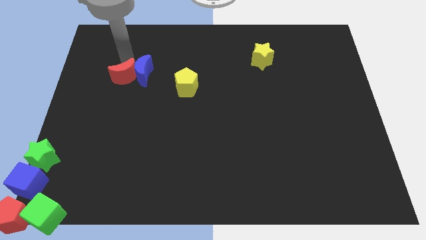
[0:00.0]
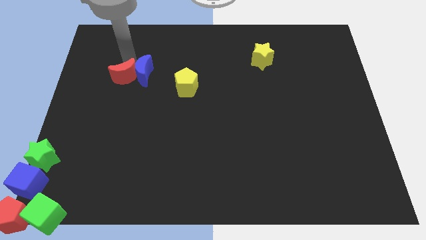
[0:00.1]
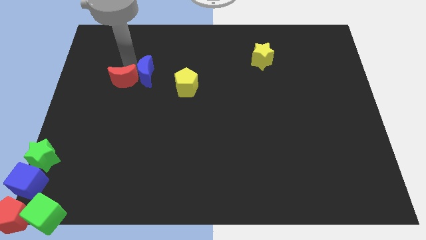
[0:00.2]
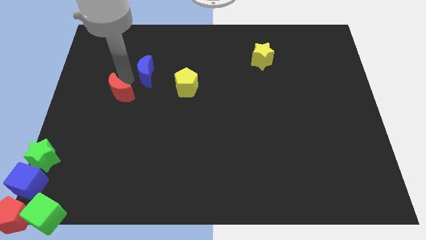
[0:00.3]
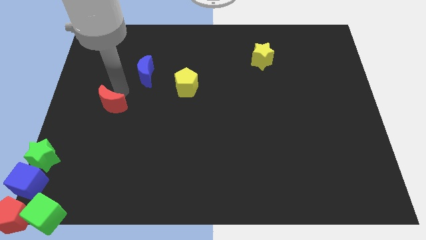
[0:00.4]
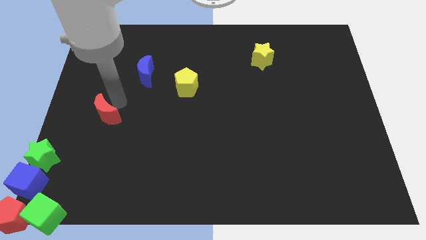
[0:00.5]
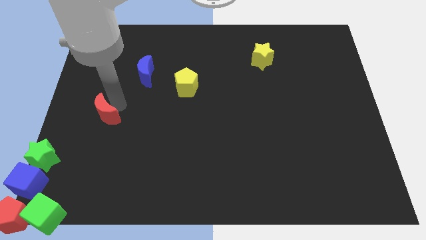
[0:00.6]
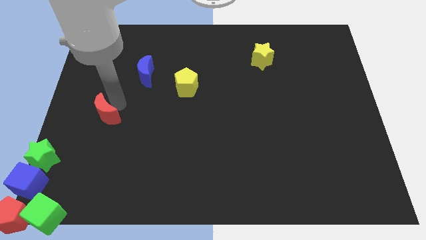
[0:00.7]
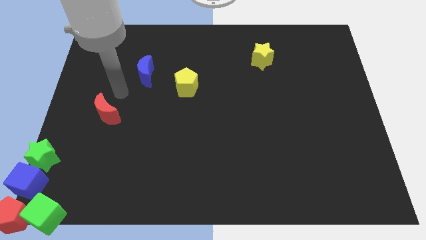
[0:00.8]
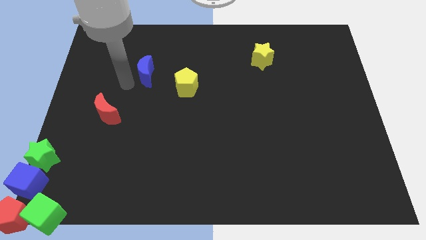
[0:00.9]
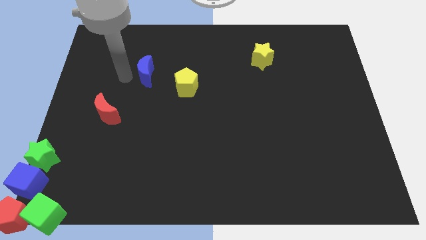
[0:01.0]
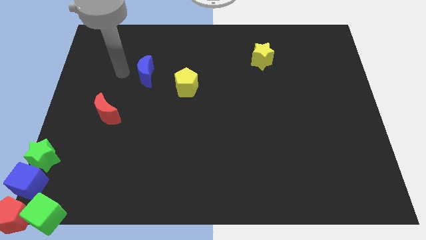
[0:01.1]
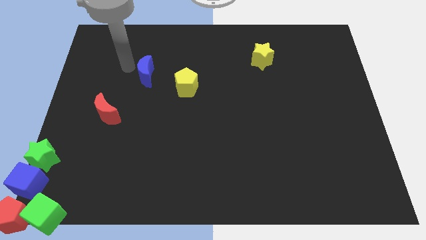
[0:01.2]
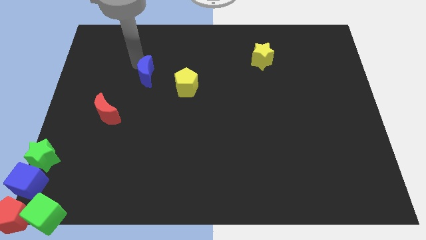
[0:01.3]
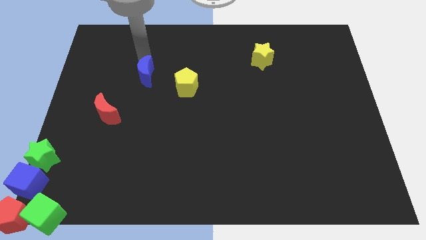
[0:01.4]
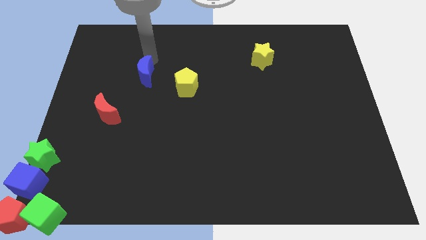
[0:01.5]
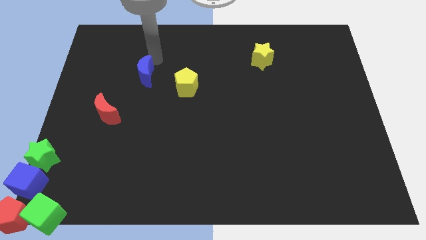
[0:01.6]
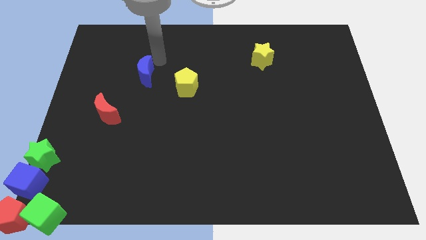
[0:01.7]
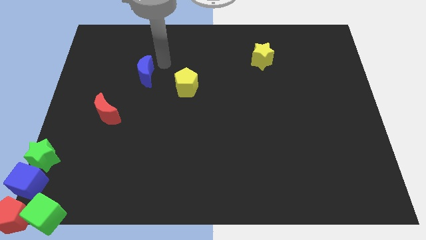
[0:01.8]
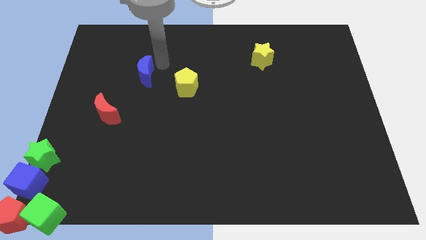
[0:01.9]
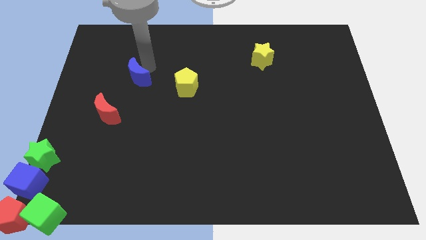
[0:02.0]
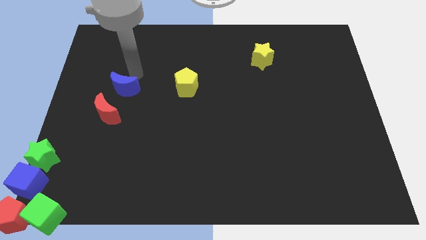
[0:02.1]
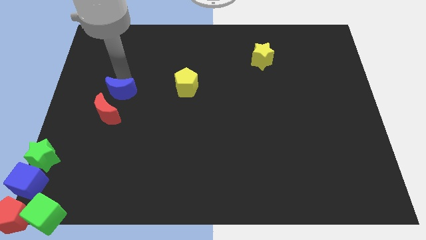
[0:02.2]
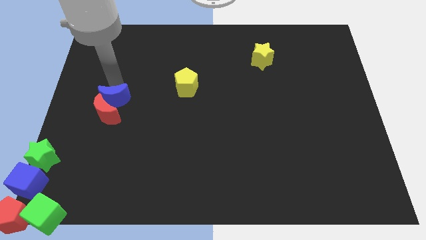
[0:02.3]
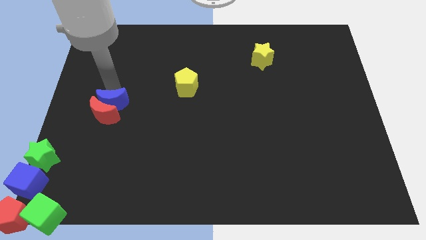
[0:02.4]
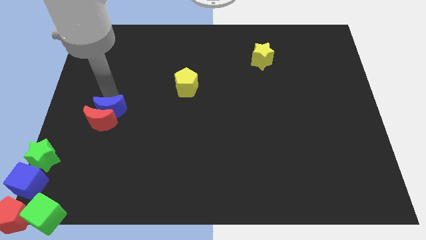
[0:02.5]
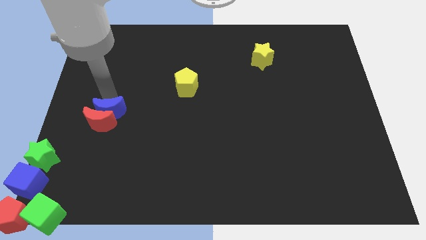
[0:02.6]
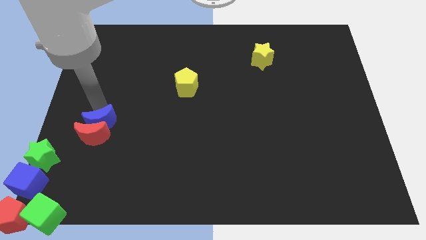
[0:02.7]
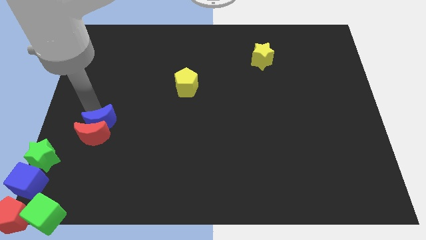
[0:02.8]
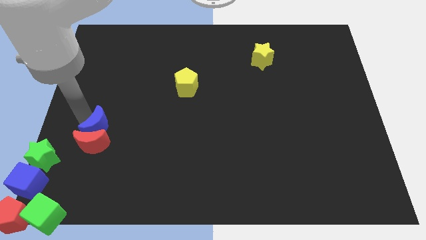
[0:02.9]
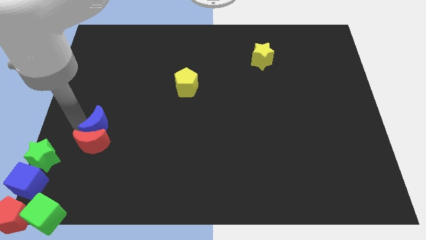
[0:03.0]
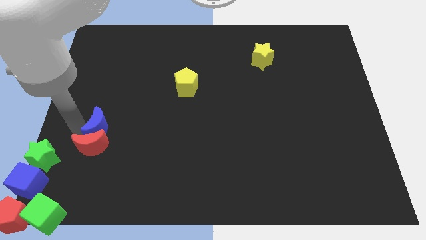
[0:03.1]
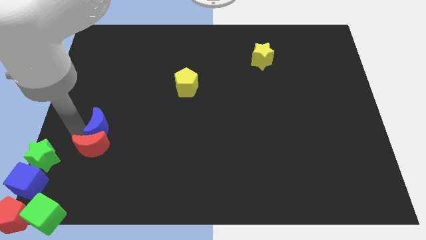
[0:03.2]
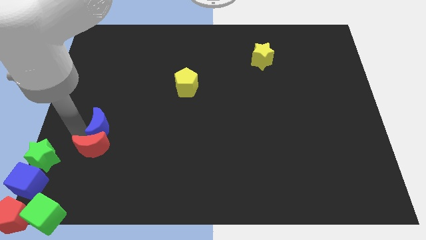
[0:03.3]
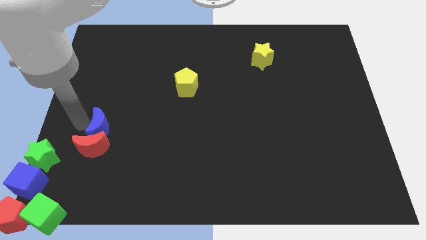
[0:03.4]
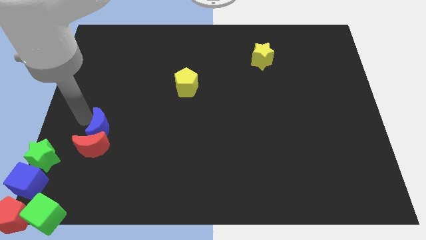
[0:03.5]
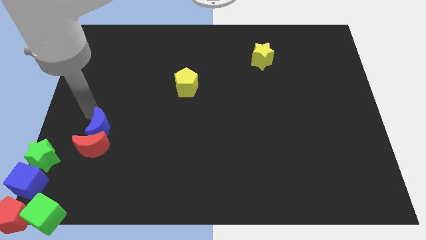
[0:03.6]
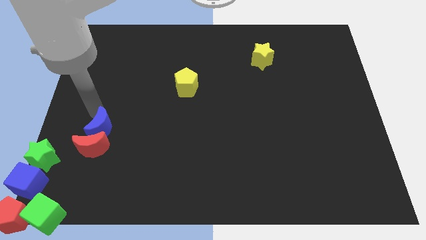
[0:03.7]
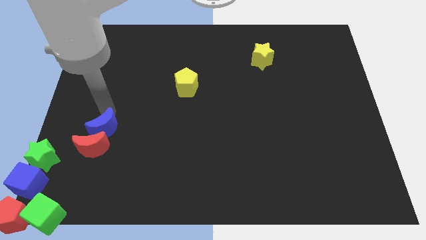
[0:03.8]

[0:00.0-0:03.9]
move both the crescents diagonal to the green star

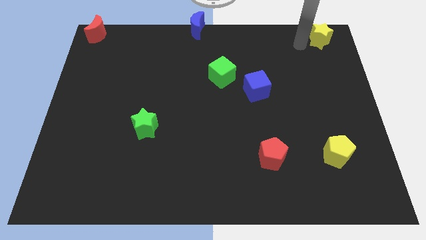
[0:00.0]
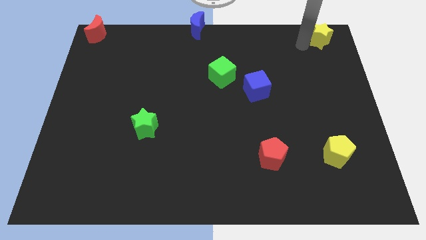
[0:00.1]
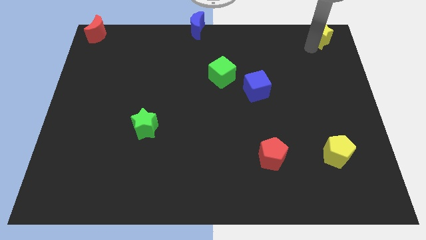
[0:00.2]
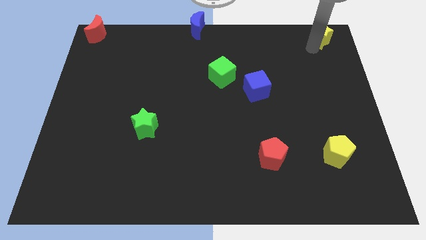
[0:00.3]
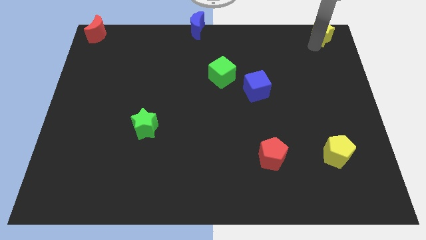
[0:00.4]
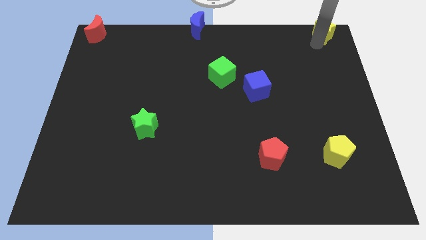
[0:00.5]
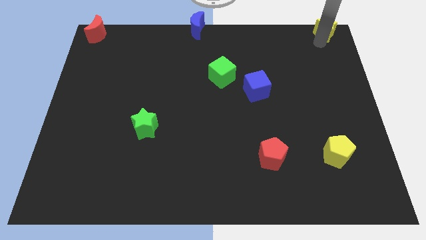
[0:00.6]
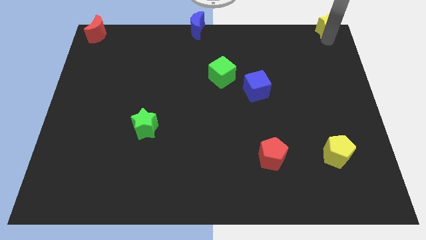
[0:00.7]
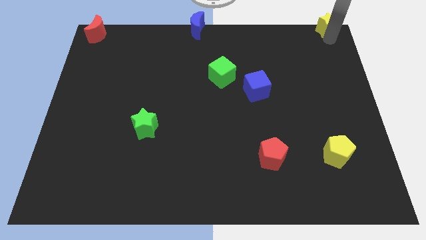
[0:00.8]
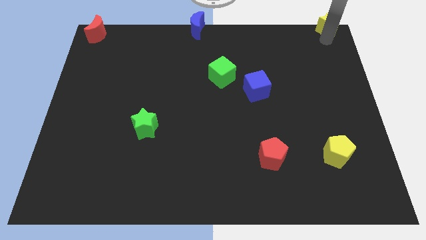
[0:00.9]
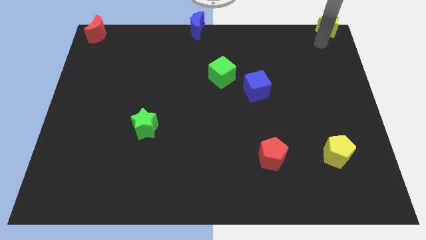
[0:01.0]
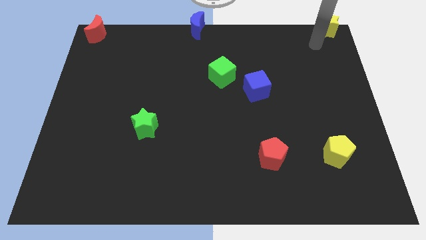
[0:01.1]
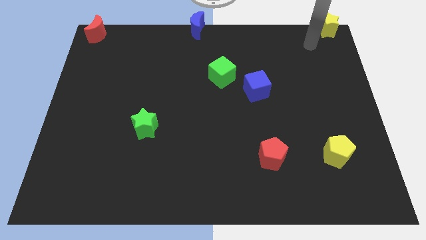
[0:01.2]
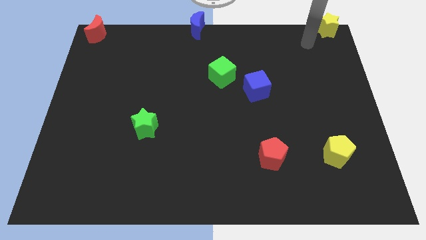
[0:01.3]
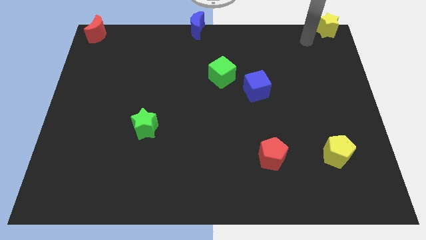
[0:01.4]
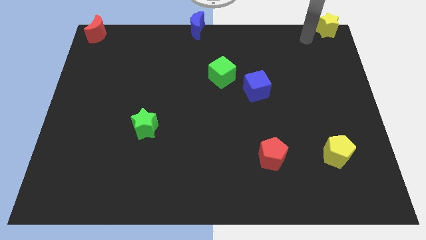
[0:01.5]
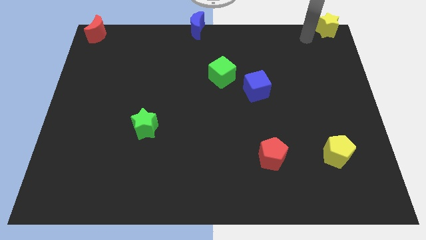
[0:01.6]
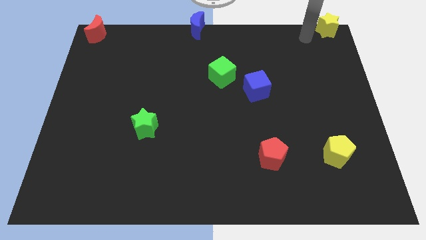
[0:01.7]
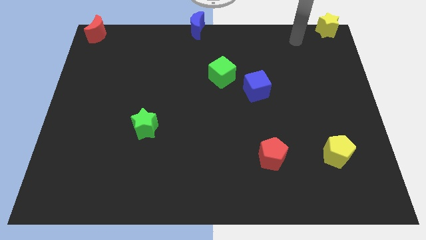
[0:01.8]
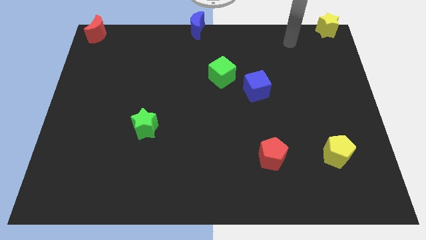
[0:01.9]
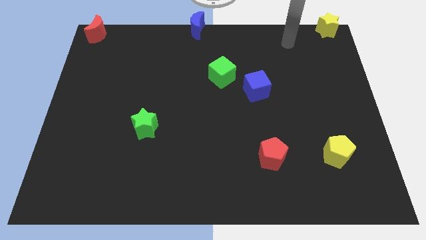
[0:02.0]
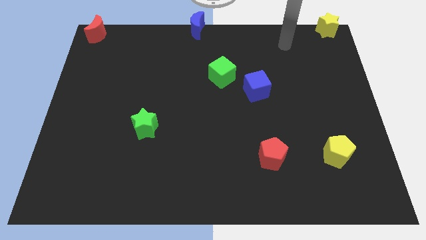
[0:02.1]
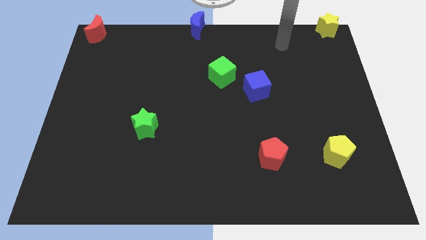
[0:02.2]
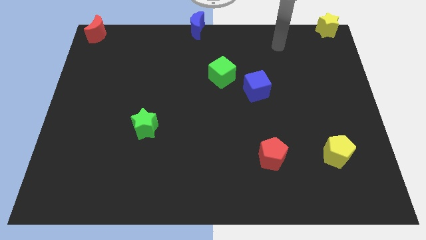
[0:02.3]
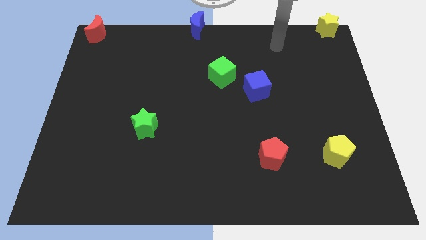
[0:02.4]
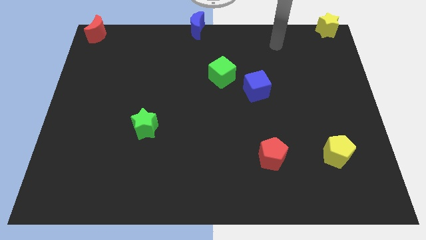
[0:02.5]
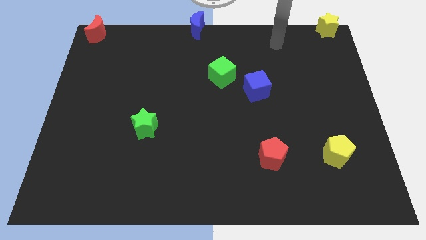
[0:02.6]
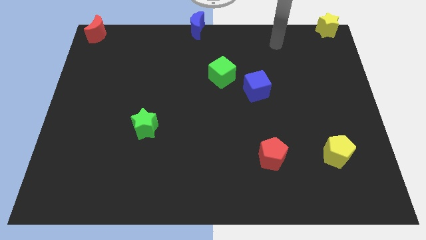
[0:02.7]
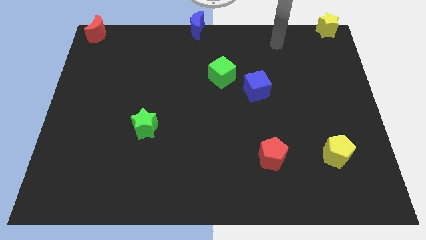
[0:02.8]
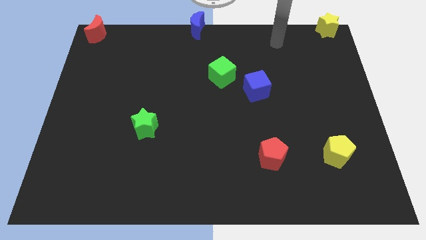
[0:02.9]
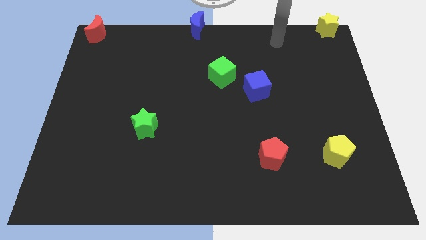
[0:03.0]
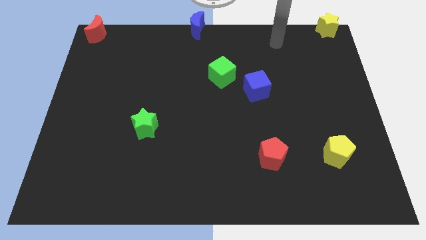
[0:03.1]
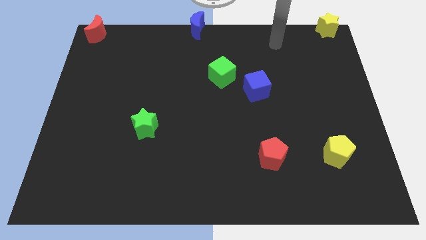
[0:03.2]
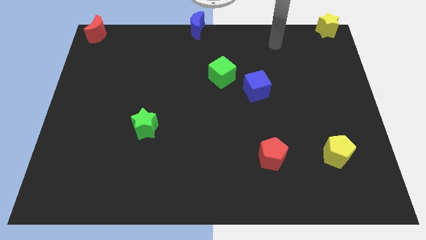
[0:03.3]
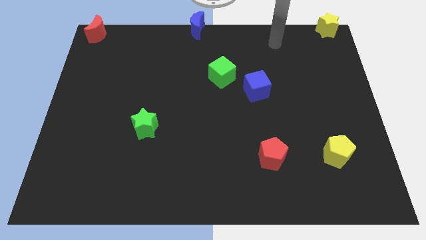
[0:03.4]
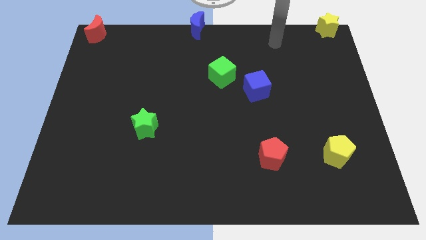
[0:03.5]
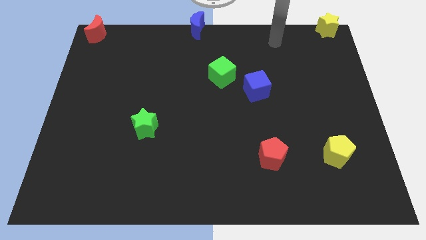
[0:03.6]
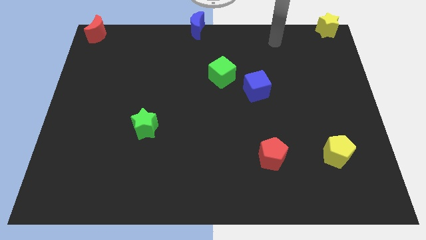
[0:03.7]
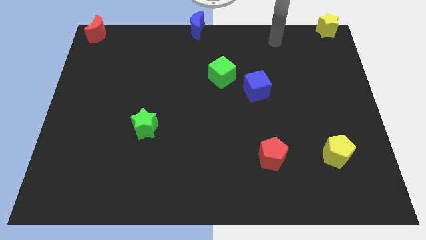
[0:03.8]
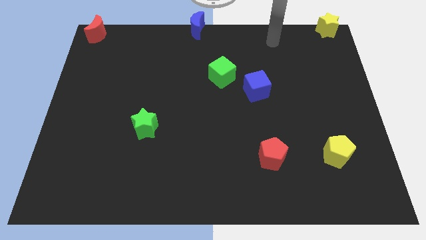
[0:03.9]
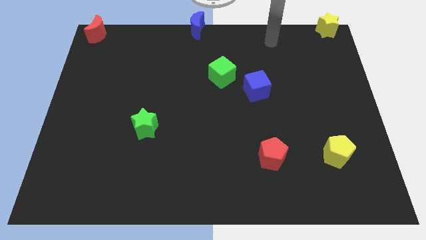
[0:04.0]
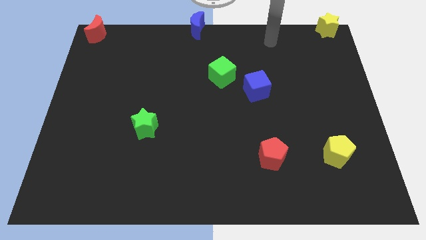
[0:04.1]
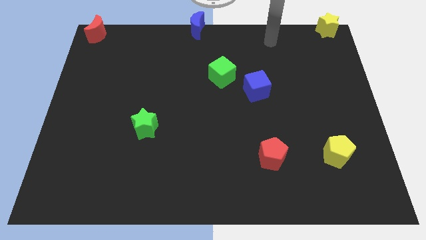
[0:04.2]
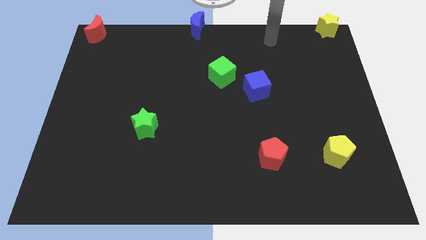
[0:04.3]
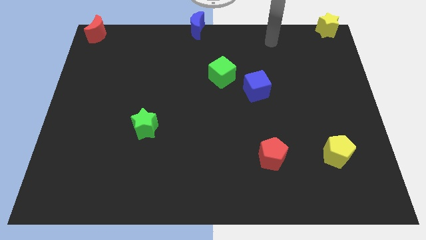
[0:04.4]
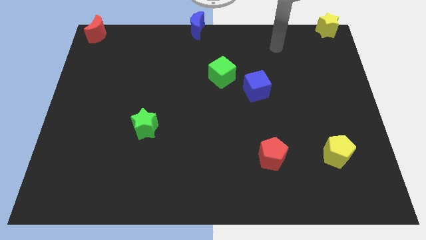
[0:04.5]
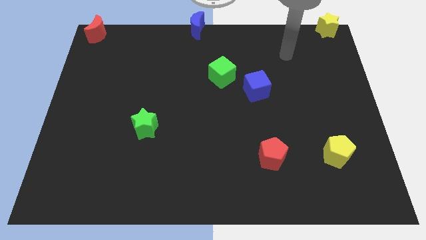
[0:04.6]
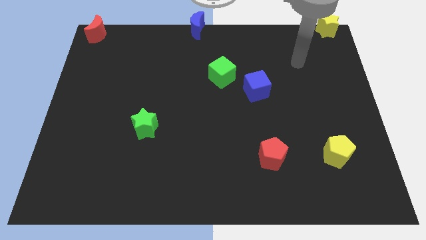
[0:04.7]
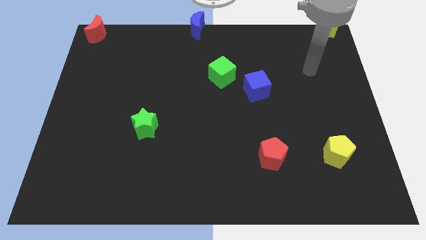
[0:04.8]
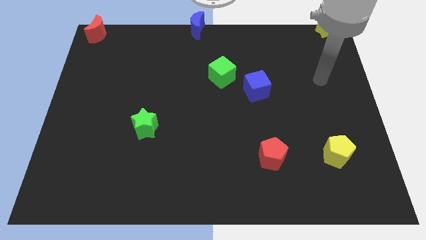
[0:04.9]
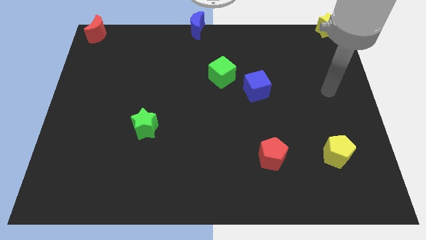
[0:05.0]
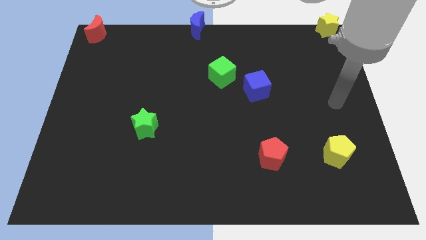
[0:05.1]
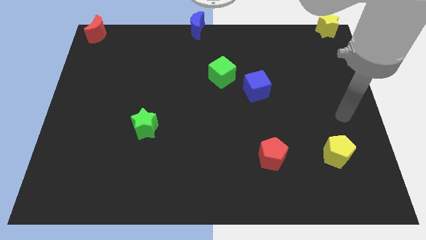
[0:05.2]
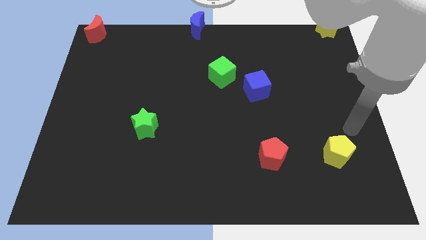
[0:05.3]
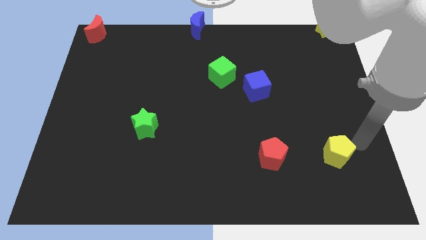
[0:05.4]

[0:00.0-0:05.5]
place your arm to the right of yellow pentagon
